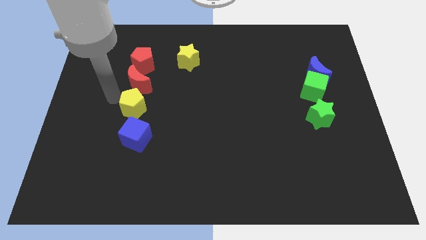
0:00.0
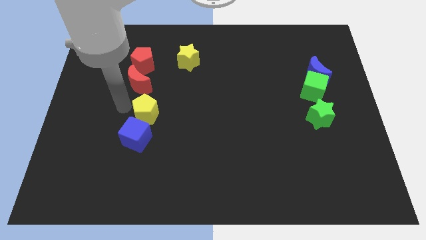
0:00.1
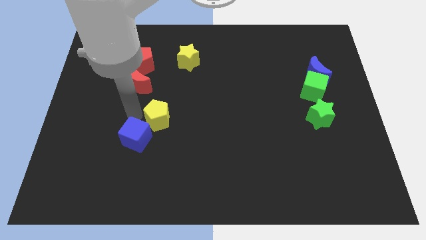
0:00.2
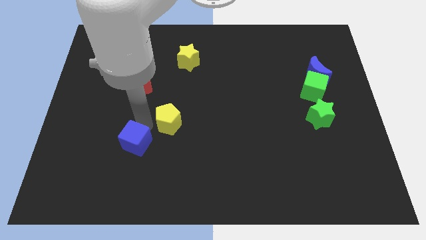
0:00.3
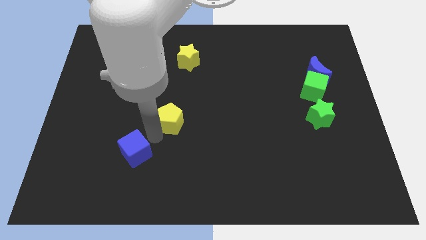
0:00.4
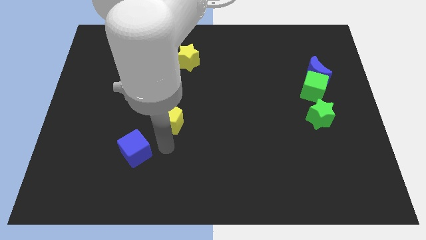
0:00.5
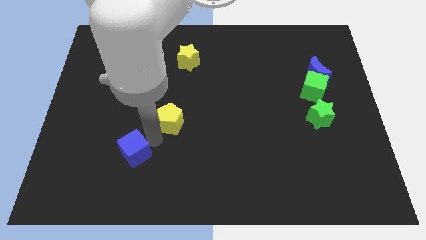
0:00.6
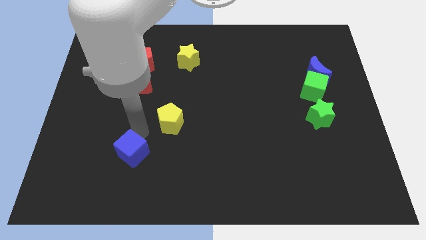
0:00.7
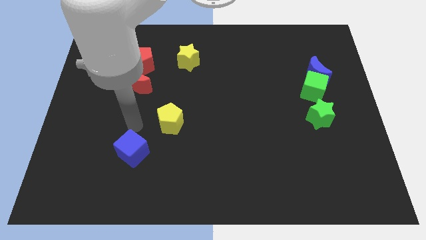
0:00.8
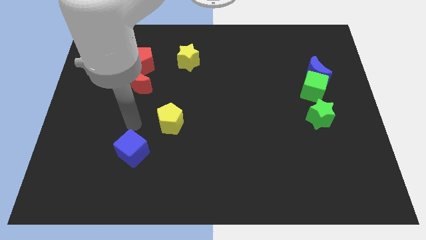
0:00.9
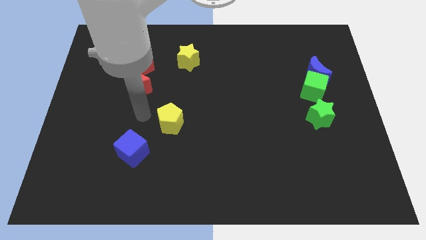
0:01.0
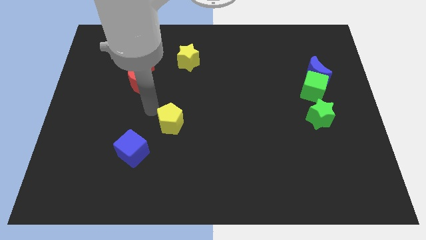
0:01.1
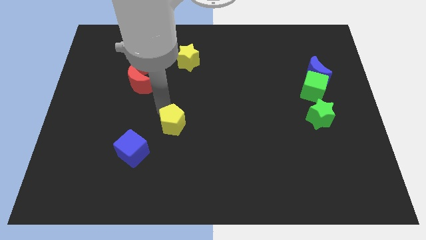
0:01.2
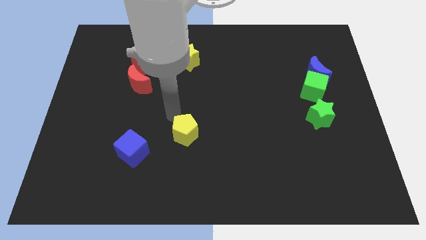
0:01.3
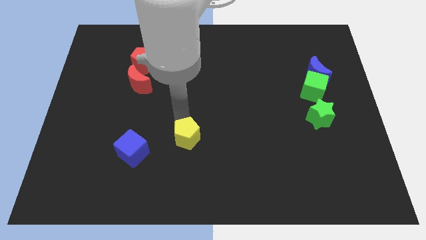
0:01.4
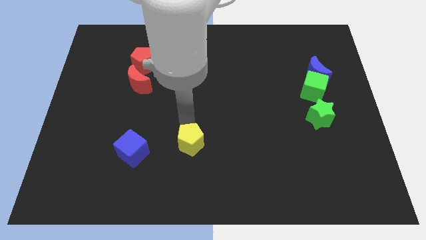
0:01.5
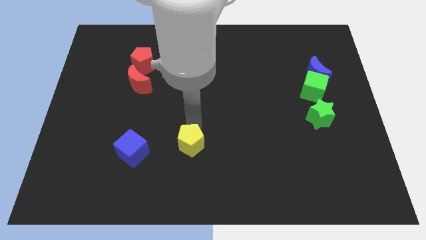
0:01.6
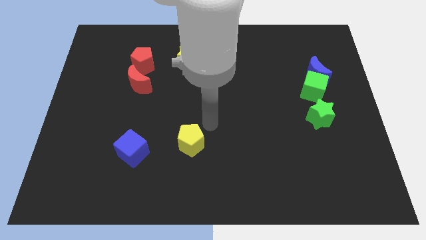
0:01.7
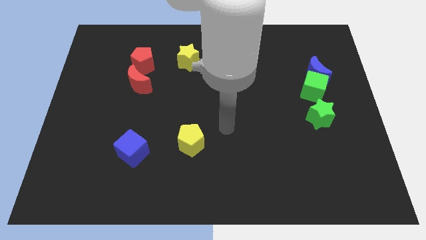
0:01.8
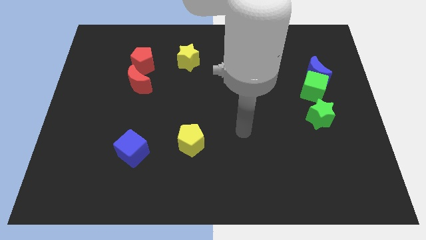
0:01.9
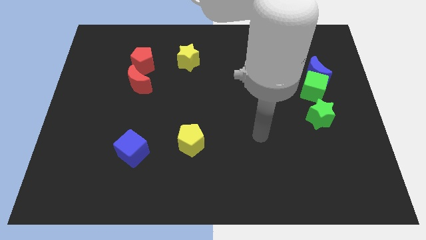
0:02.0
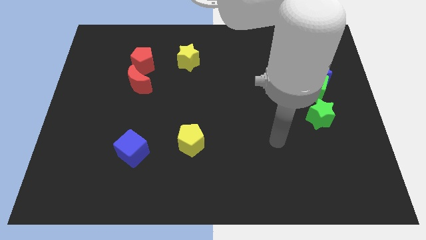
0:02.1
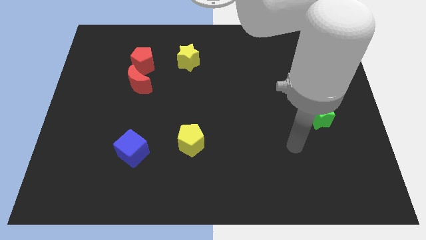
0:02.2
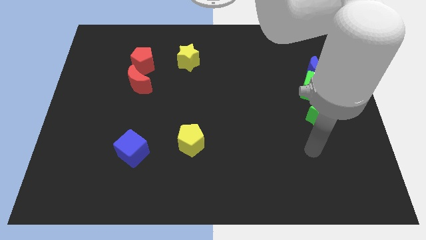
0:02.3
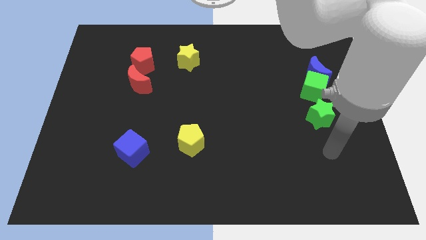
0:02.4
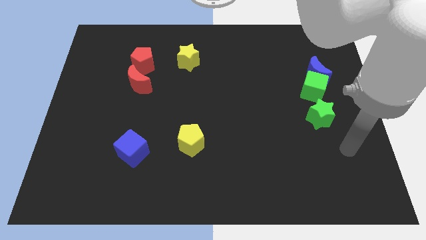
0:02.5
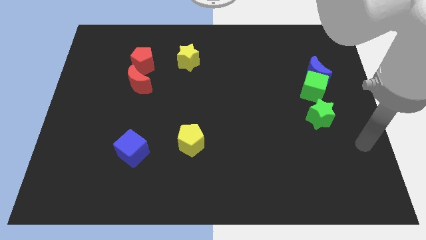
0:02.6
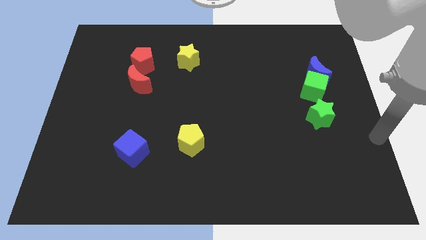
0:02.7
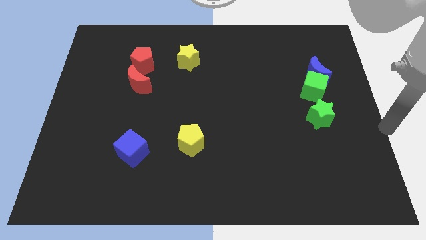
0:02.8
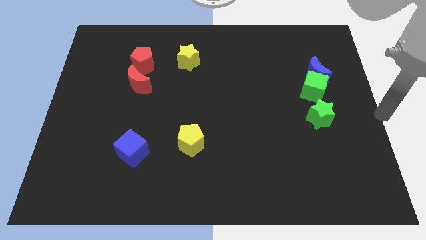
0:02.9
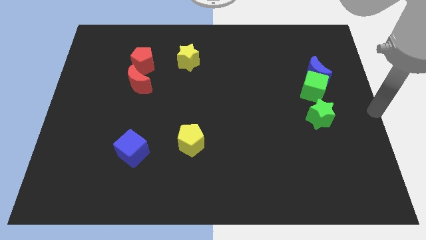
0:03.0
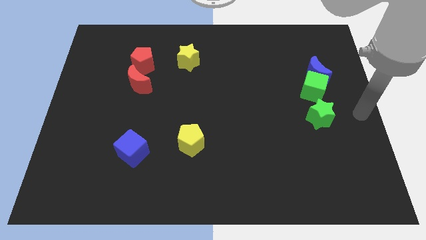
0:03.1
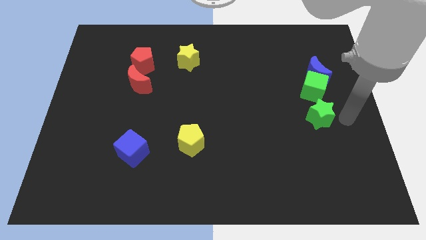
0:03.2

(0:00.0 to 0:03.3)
separate the blue cube and yellow pentagon

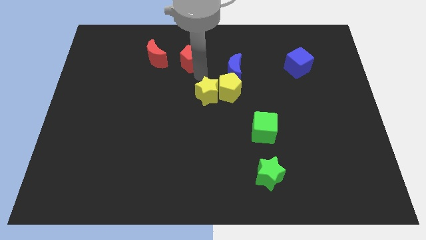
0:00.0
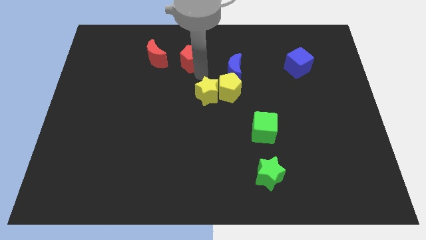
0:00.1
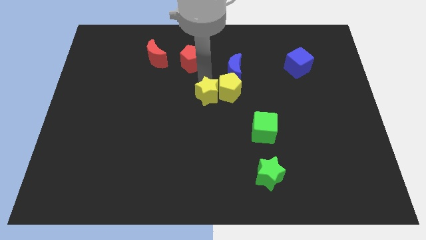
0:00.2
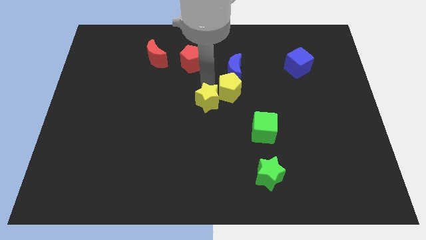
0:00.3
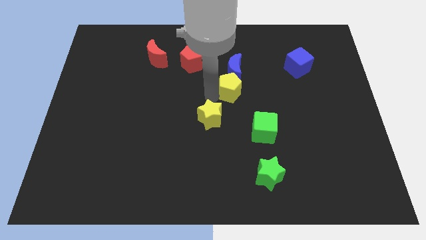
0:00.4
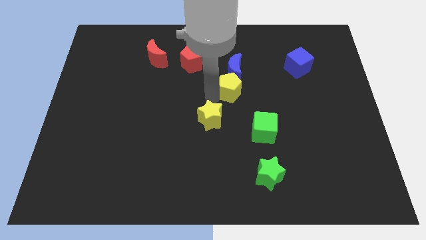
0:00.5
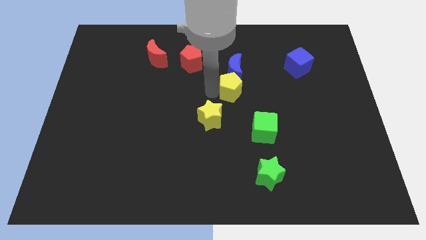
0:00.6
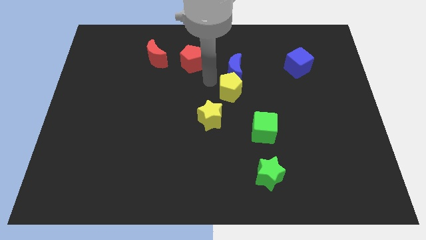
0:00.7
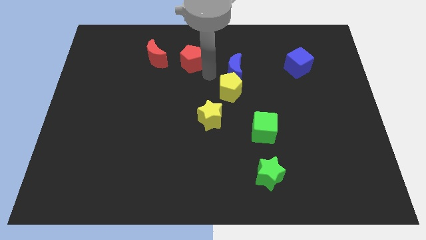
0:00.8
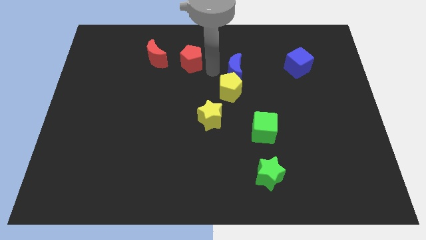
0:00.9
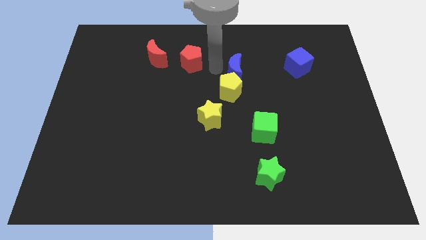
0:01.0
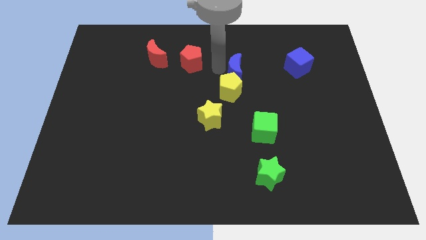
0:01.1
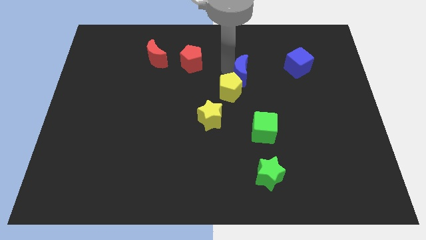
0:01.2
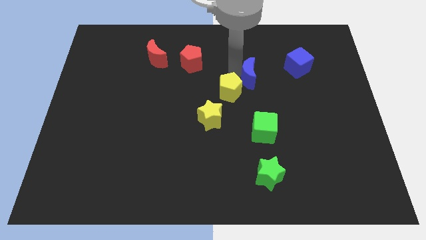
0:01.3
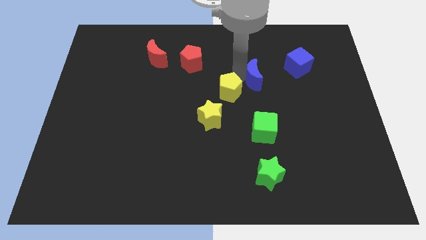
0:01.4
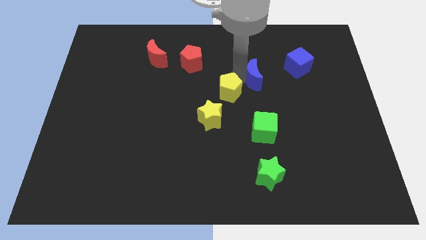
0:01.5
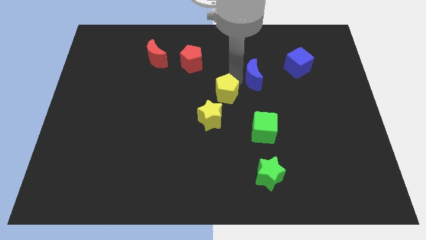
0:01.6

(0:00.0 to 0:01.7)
move yellow star slightly downwards

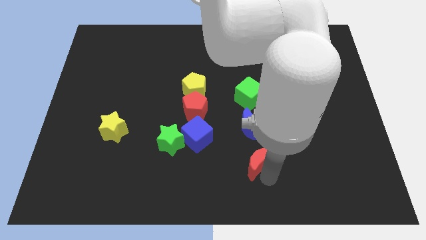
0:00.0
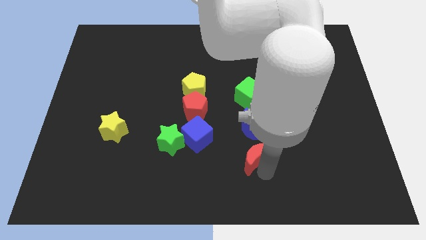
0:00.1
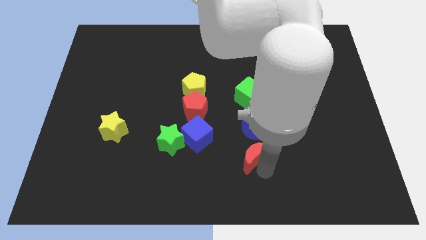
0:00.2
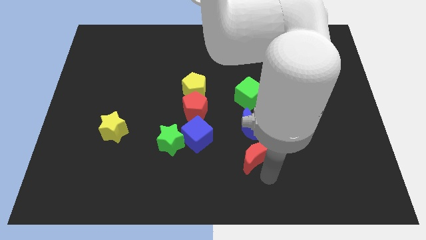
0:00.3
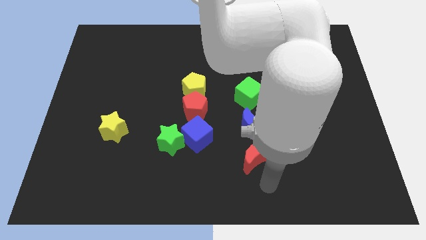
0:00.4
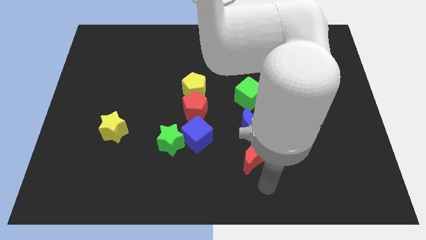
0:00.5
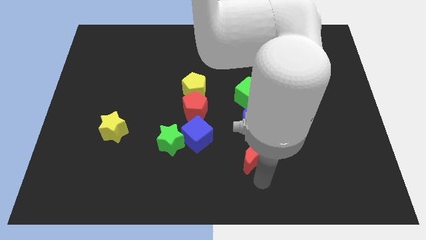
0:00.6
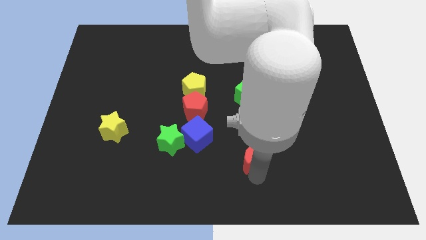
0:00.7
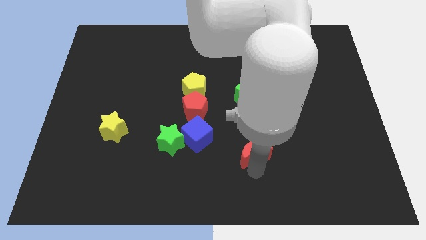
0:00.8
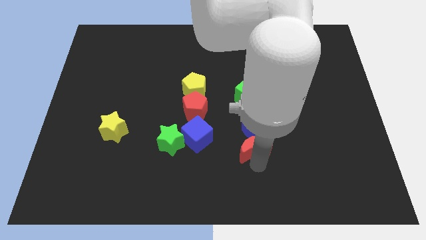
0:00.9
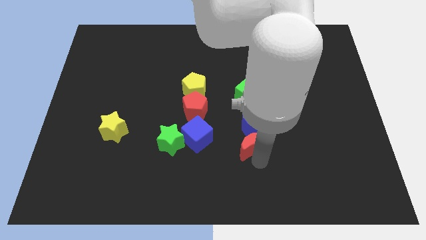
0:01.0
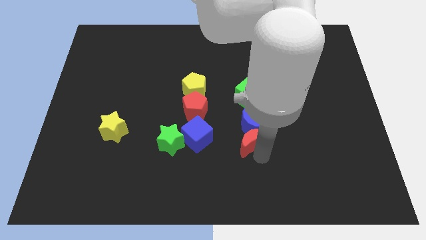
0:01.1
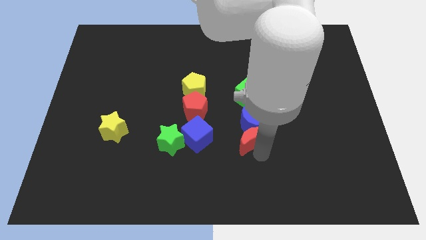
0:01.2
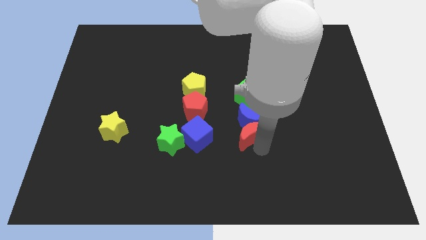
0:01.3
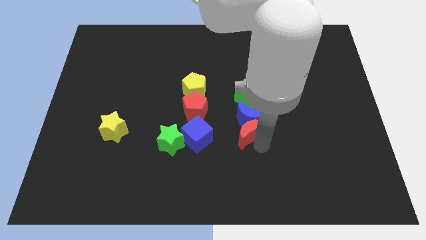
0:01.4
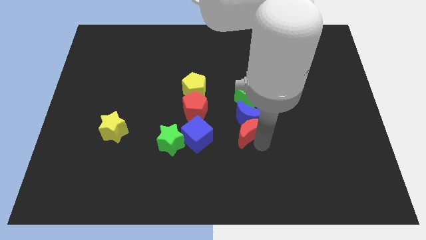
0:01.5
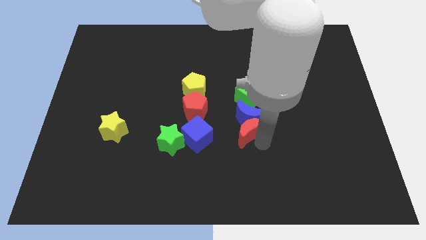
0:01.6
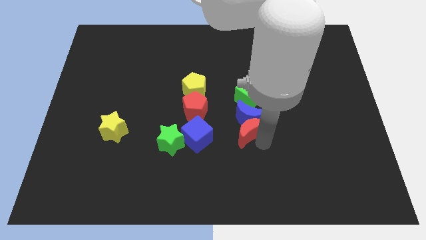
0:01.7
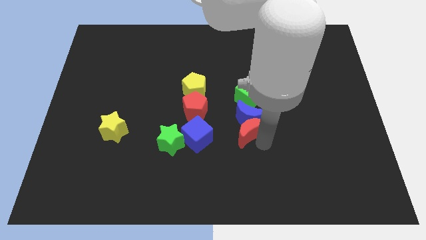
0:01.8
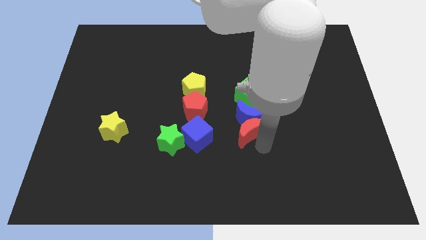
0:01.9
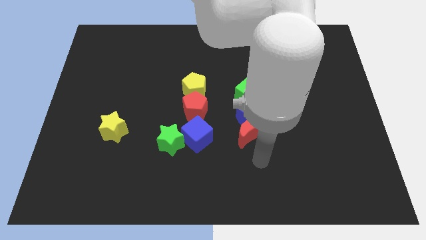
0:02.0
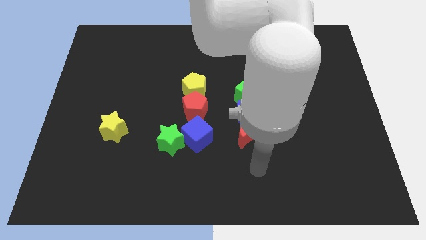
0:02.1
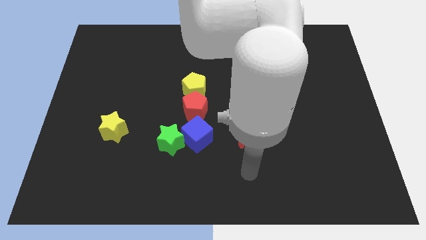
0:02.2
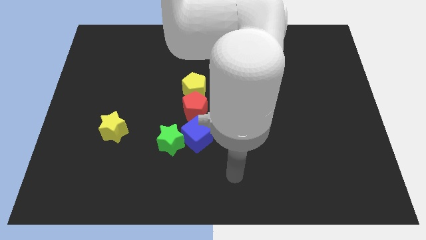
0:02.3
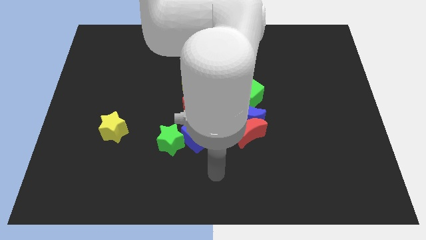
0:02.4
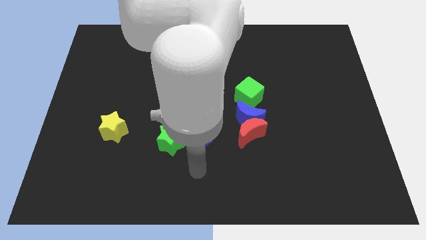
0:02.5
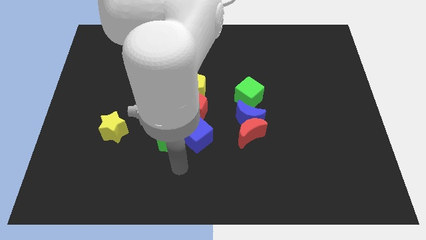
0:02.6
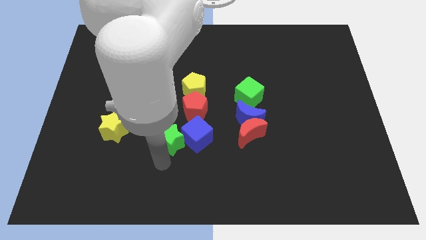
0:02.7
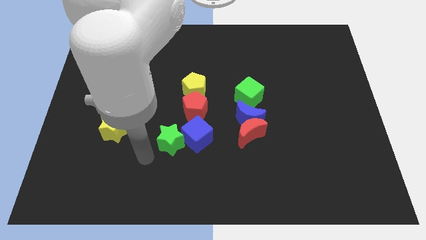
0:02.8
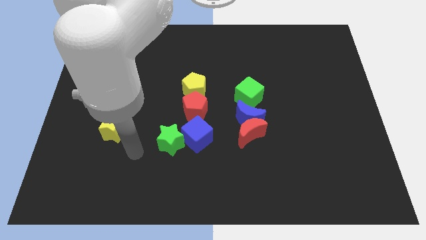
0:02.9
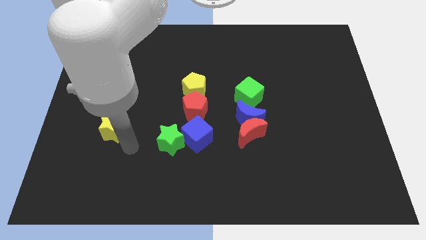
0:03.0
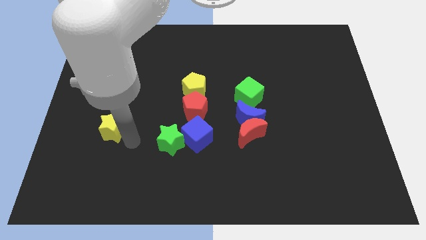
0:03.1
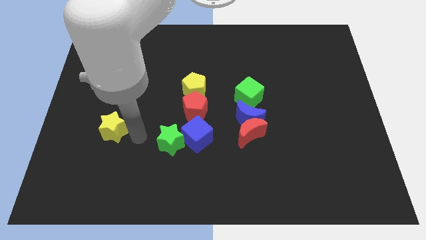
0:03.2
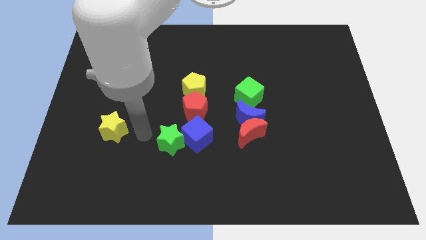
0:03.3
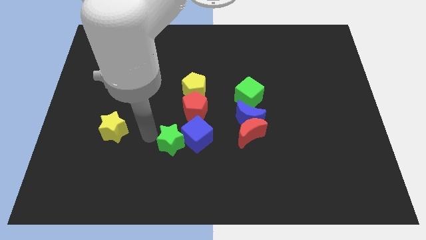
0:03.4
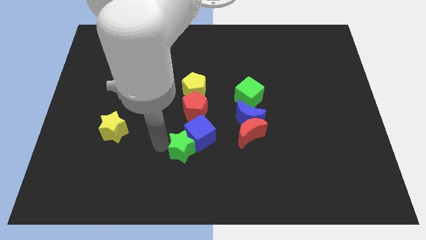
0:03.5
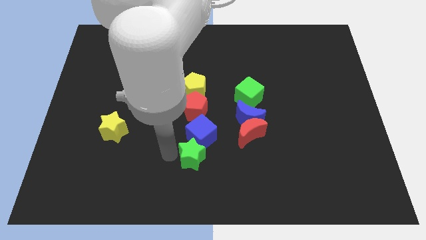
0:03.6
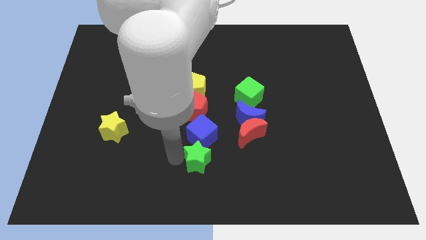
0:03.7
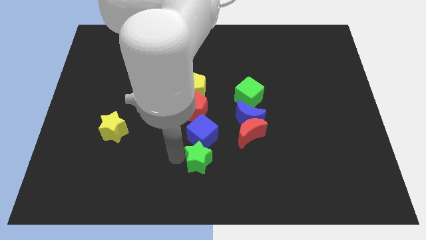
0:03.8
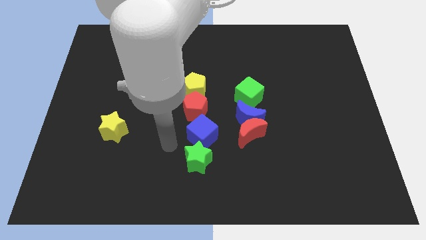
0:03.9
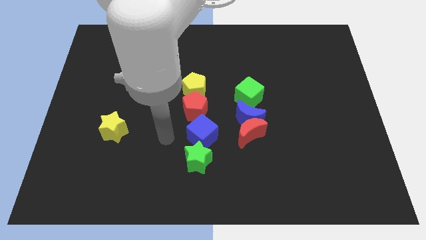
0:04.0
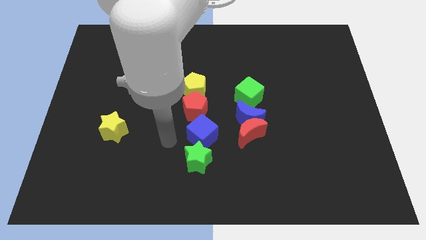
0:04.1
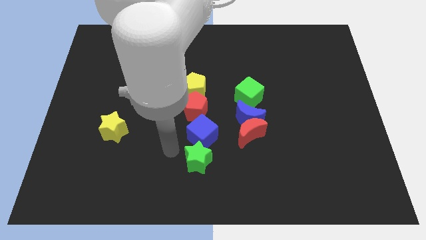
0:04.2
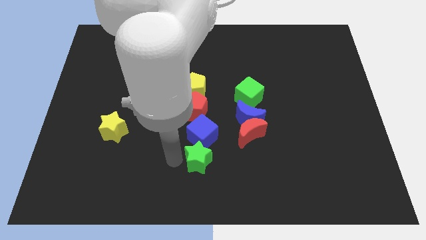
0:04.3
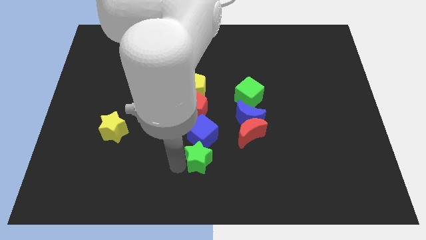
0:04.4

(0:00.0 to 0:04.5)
move the green star to the bottom of blue cube
